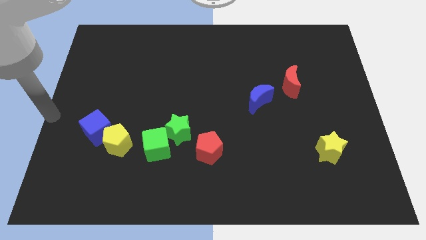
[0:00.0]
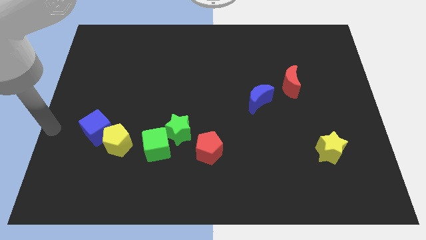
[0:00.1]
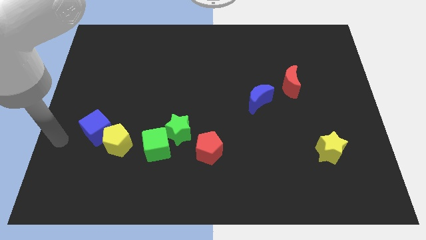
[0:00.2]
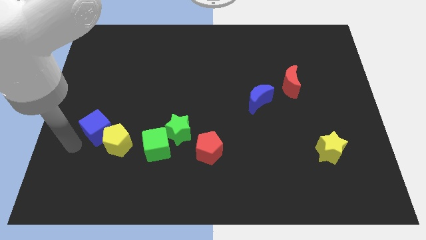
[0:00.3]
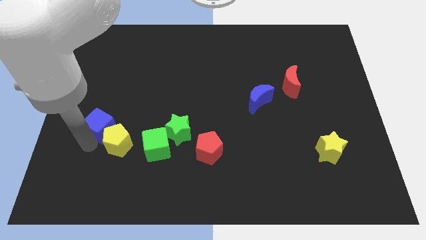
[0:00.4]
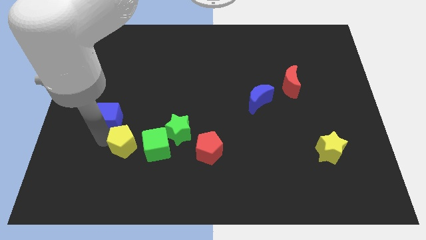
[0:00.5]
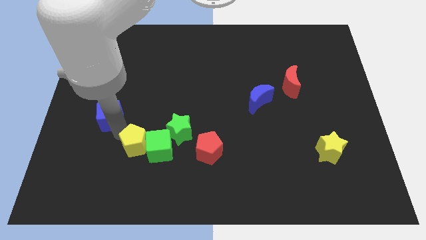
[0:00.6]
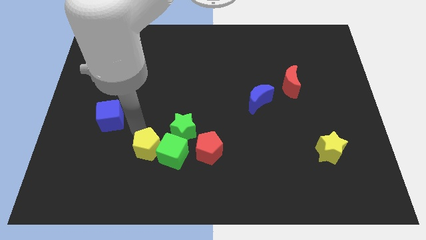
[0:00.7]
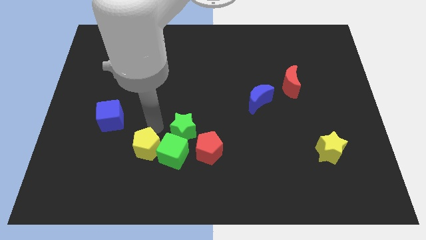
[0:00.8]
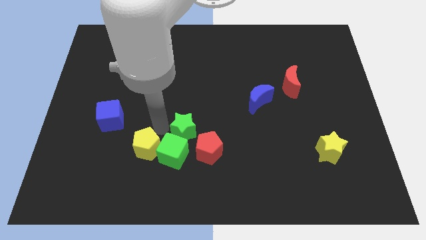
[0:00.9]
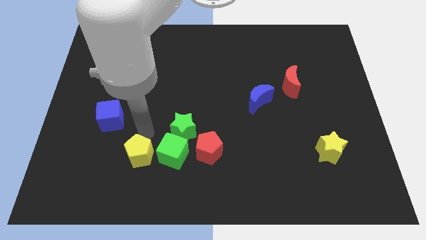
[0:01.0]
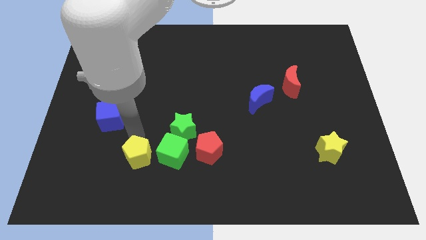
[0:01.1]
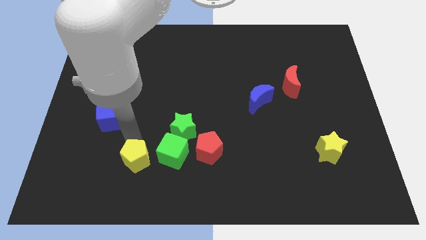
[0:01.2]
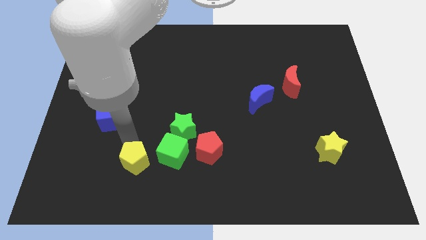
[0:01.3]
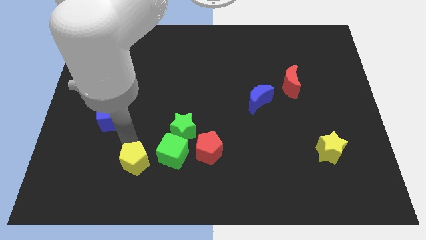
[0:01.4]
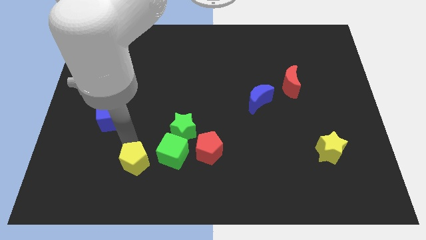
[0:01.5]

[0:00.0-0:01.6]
separate the yellow pentagon from blue cube

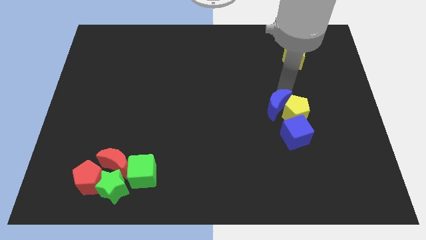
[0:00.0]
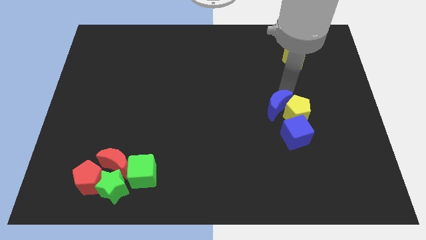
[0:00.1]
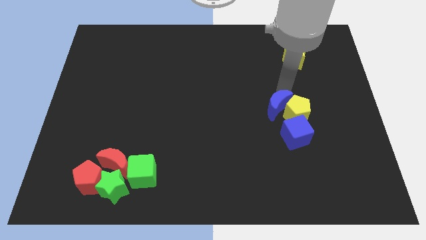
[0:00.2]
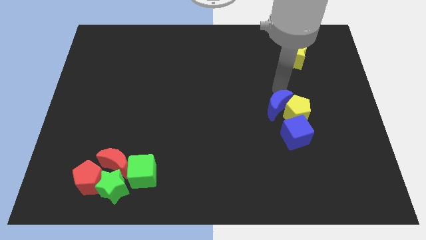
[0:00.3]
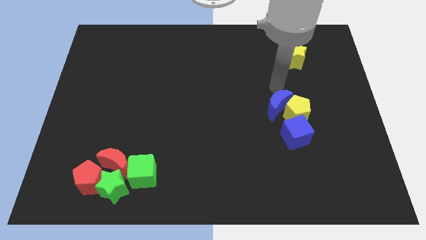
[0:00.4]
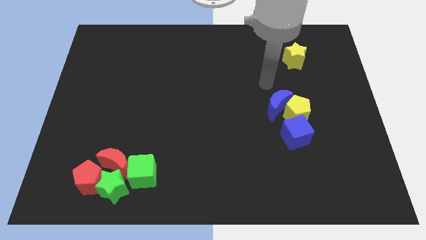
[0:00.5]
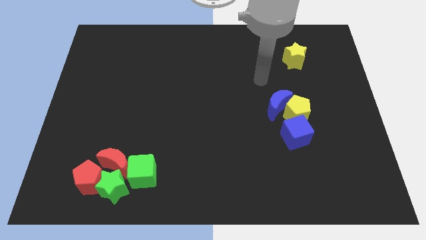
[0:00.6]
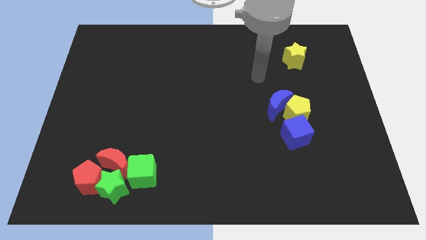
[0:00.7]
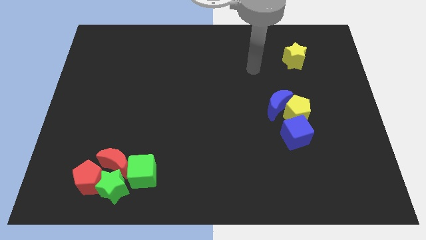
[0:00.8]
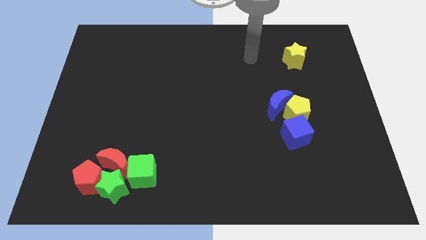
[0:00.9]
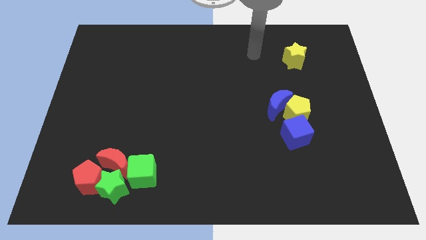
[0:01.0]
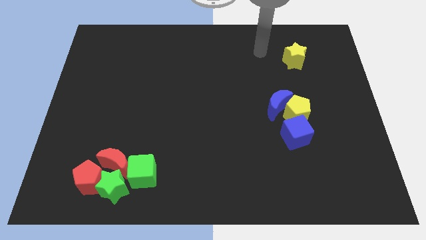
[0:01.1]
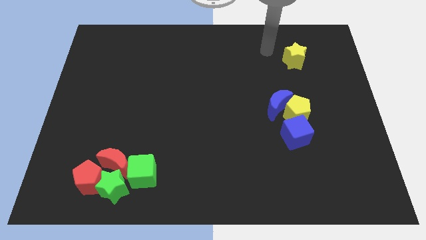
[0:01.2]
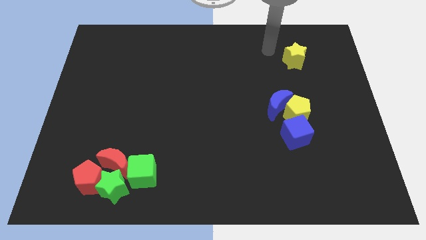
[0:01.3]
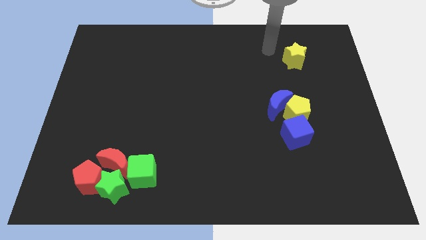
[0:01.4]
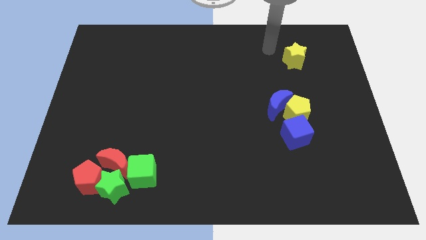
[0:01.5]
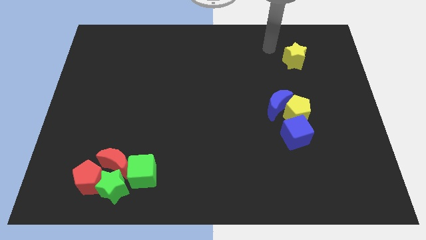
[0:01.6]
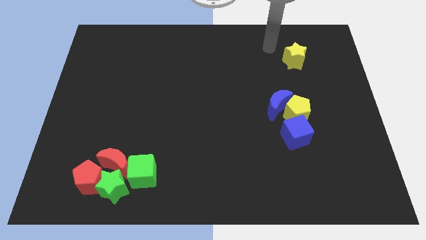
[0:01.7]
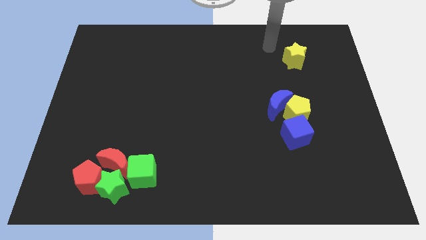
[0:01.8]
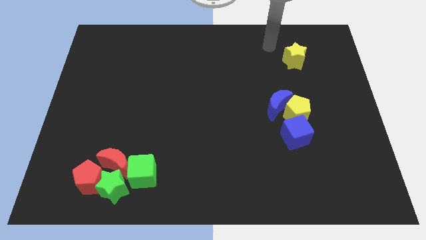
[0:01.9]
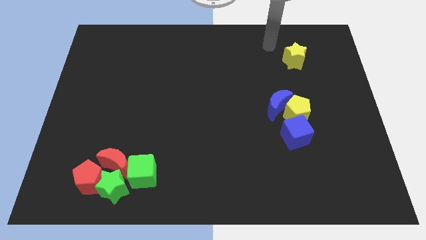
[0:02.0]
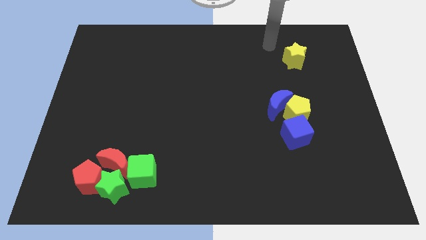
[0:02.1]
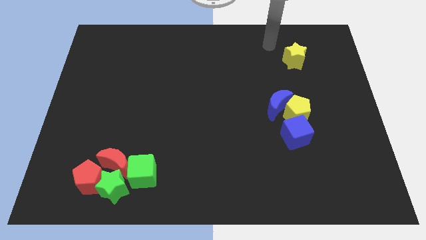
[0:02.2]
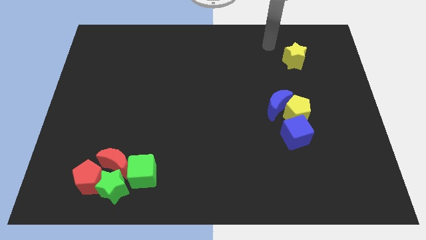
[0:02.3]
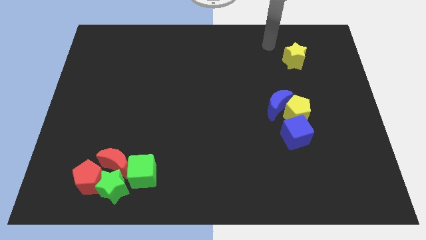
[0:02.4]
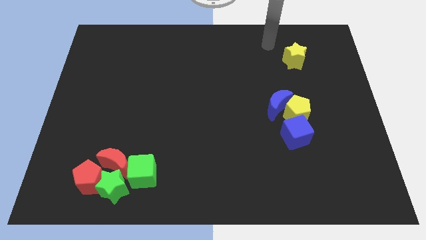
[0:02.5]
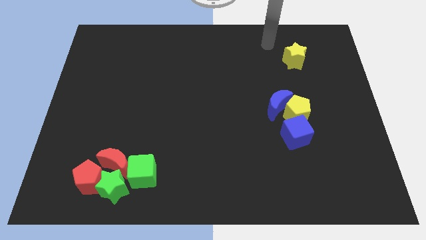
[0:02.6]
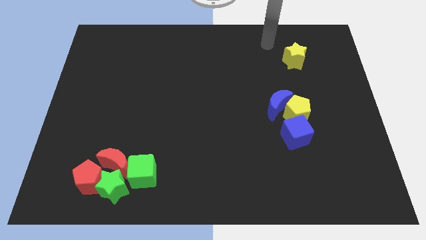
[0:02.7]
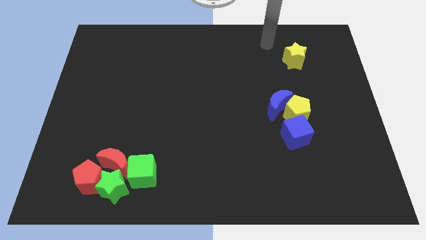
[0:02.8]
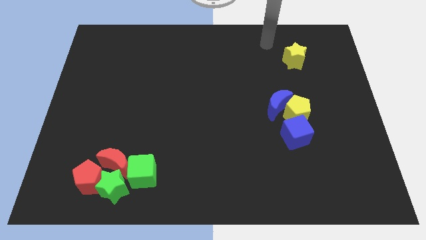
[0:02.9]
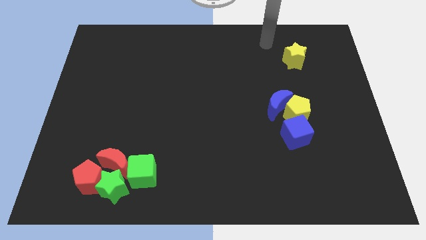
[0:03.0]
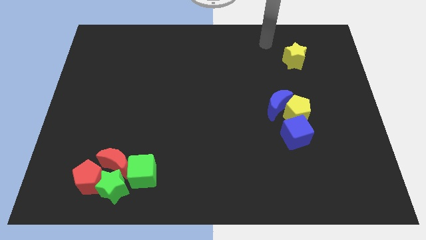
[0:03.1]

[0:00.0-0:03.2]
place your hand diagonally top left to the yellow star

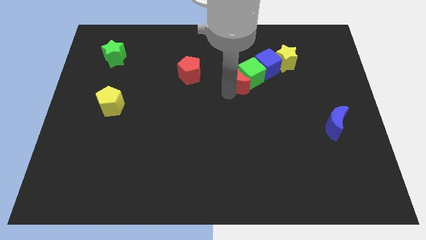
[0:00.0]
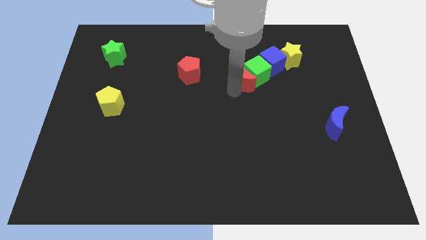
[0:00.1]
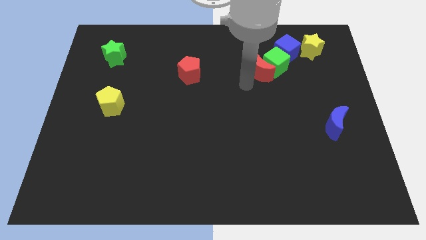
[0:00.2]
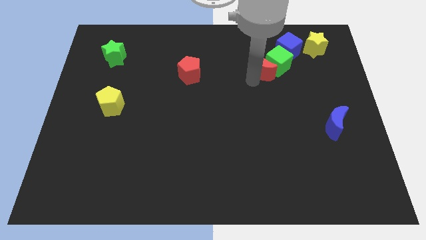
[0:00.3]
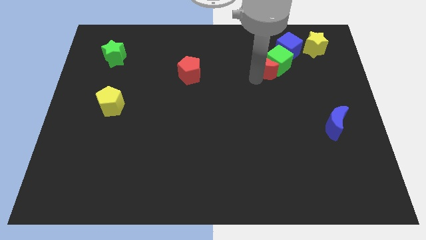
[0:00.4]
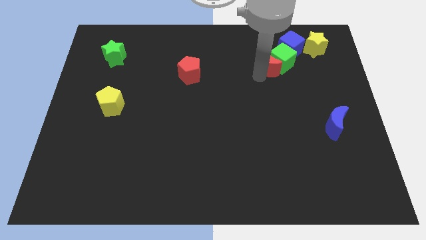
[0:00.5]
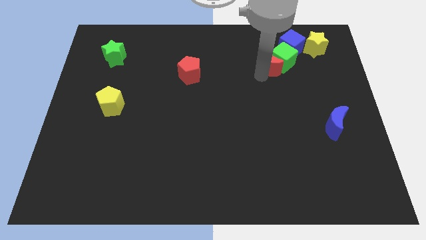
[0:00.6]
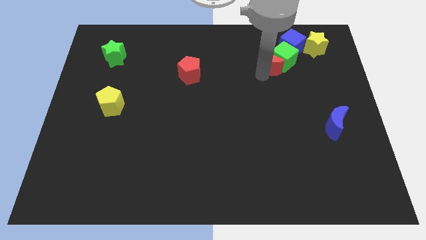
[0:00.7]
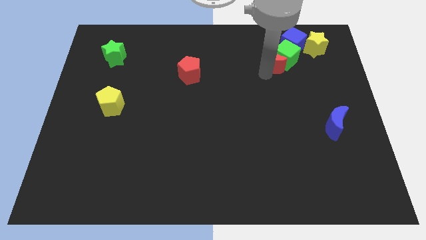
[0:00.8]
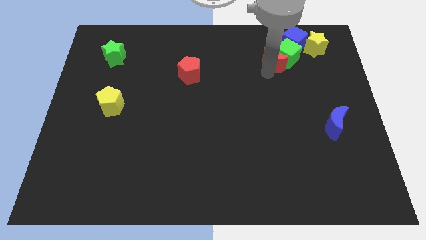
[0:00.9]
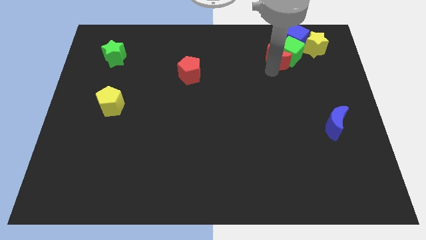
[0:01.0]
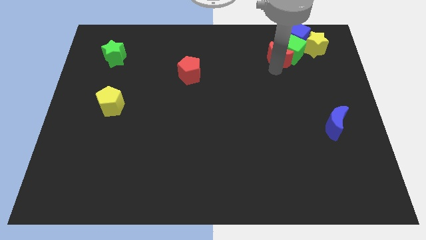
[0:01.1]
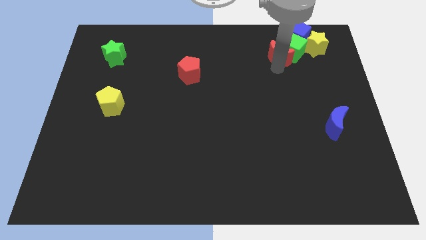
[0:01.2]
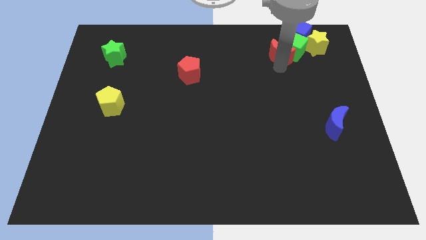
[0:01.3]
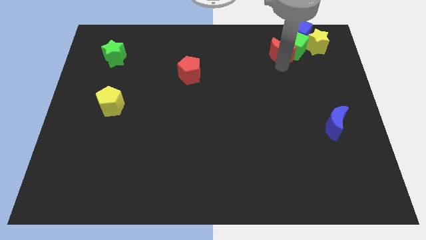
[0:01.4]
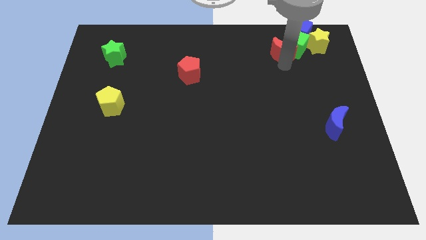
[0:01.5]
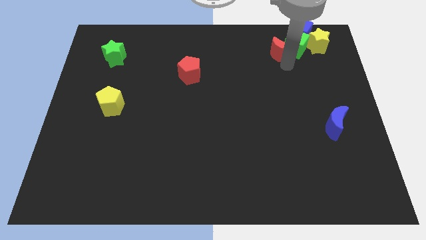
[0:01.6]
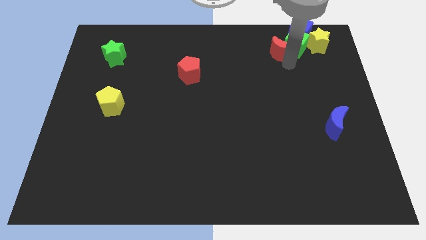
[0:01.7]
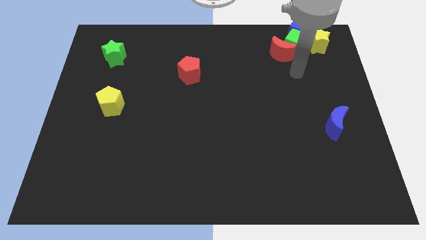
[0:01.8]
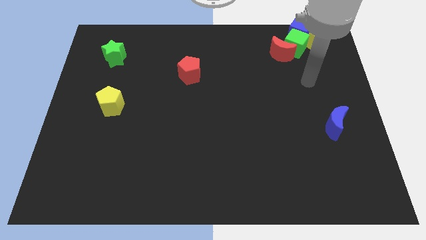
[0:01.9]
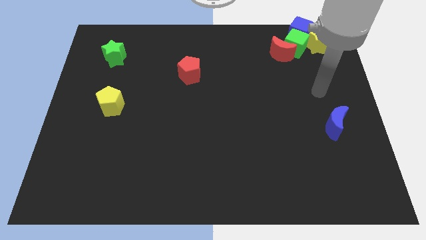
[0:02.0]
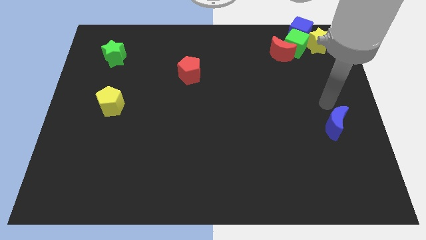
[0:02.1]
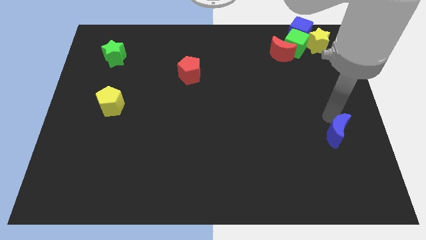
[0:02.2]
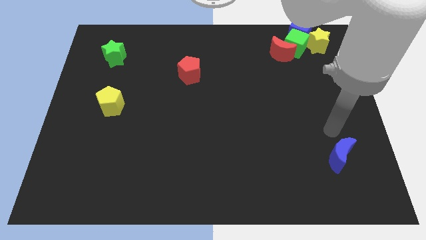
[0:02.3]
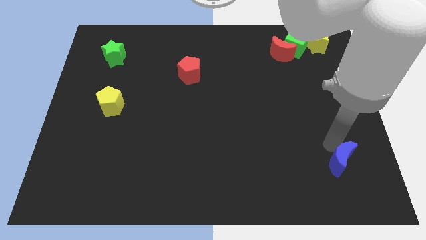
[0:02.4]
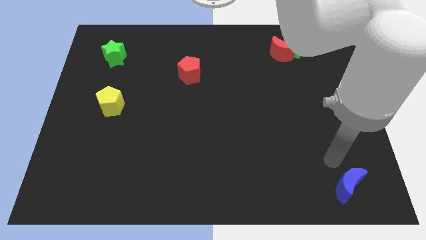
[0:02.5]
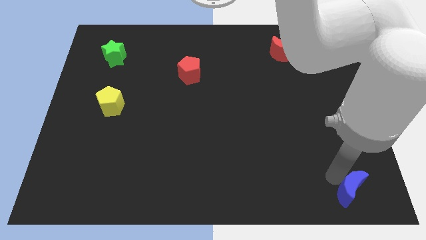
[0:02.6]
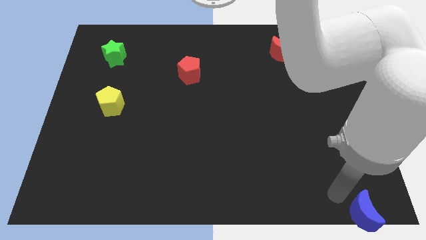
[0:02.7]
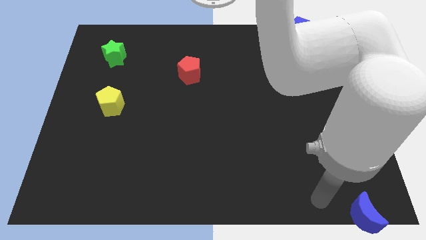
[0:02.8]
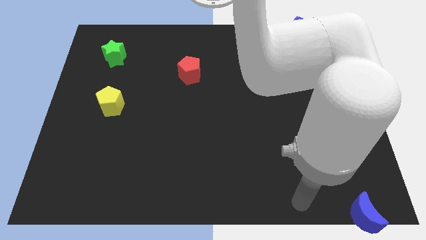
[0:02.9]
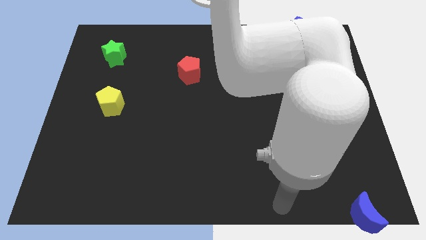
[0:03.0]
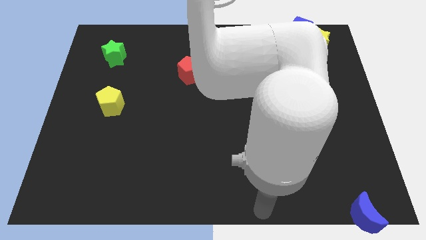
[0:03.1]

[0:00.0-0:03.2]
push blue moon to the bottom right

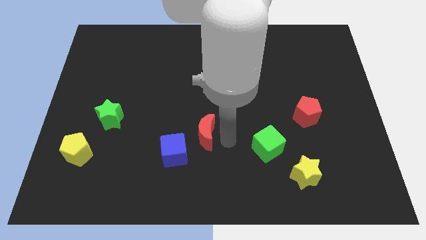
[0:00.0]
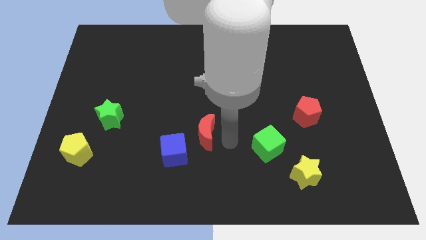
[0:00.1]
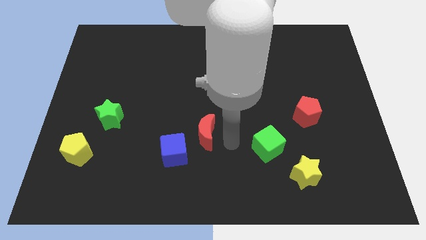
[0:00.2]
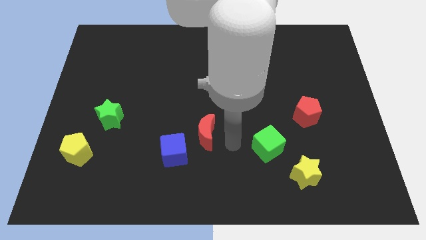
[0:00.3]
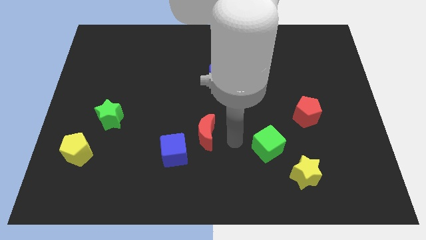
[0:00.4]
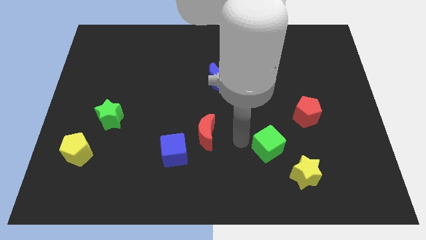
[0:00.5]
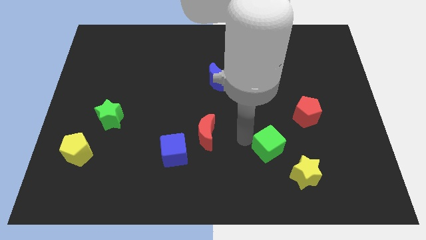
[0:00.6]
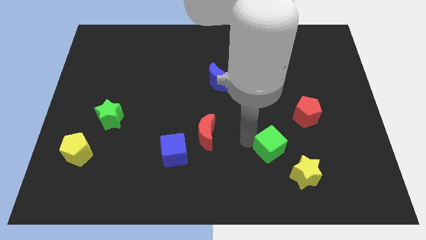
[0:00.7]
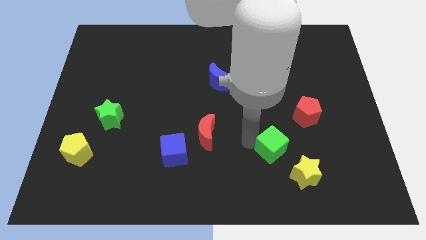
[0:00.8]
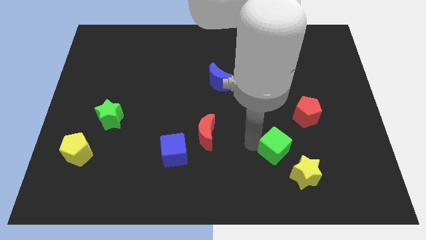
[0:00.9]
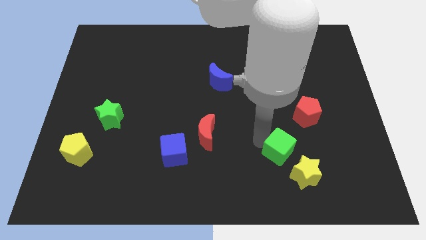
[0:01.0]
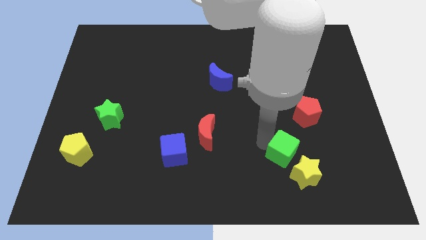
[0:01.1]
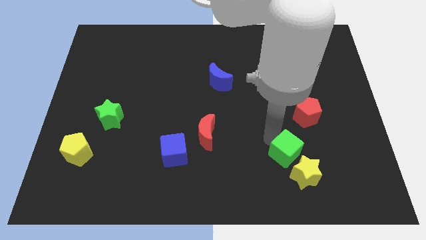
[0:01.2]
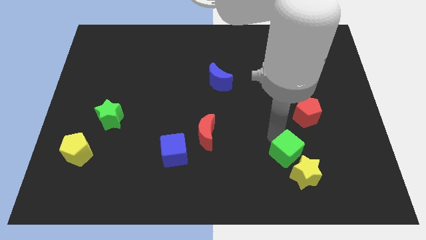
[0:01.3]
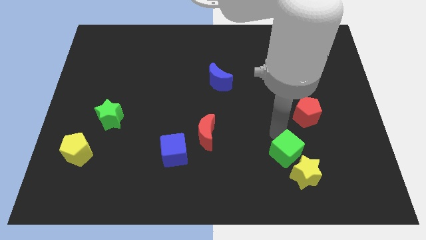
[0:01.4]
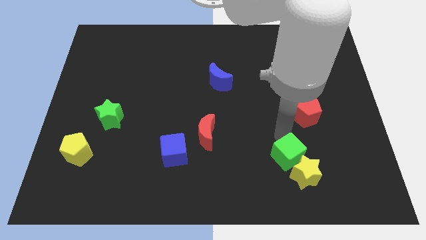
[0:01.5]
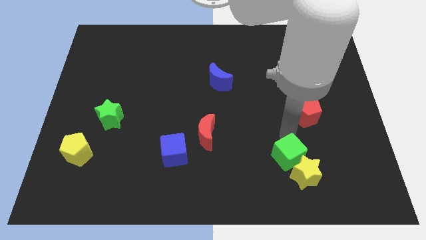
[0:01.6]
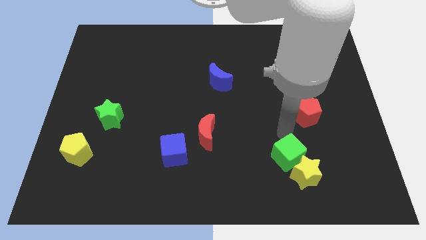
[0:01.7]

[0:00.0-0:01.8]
push the green cube into the yellow star
